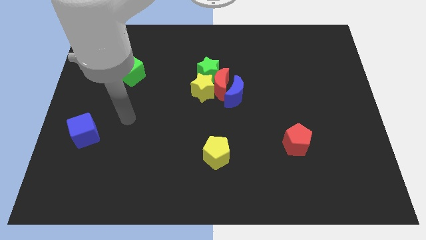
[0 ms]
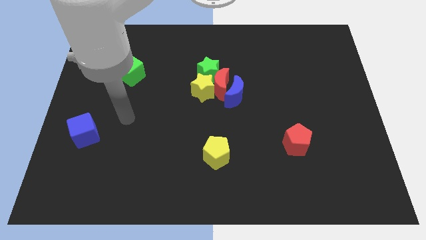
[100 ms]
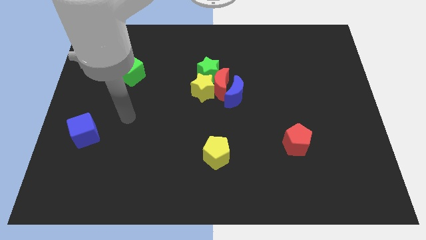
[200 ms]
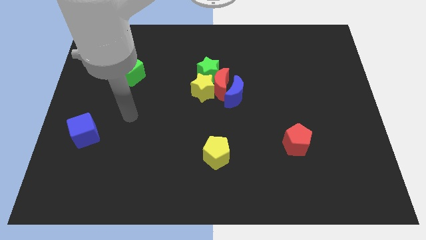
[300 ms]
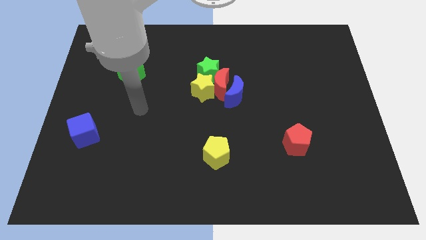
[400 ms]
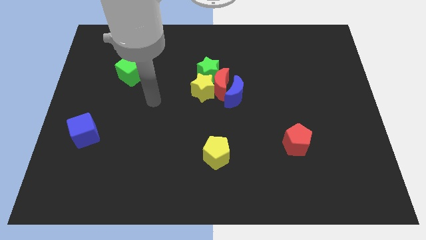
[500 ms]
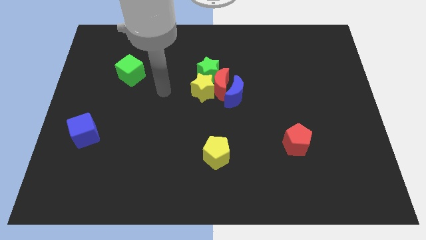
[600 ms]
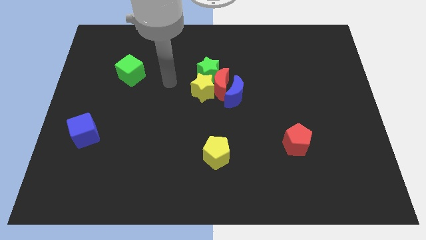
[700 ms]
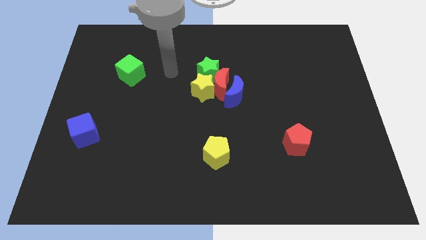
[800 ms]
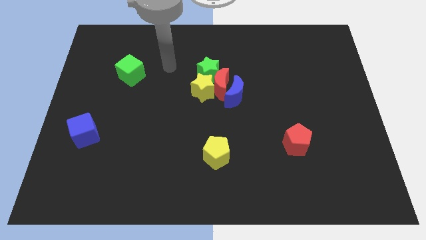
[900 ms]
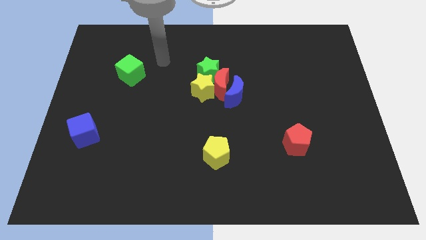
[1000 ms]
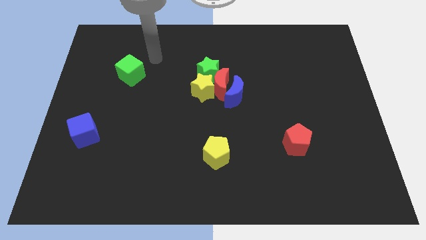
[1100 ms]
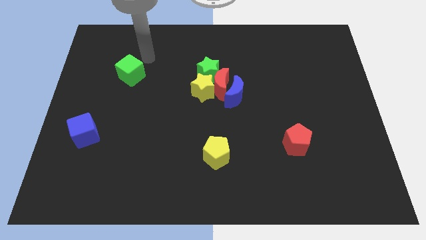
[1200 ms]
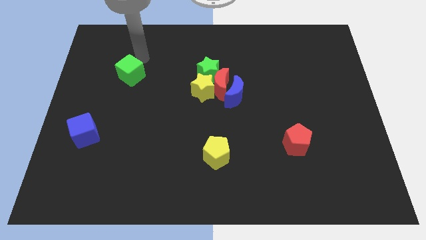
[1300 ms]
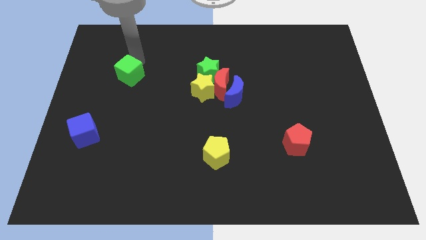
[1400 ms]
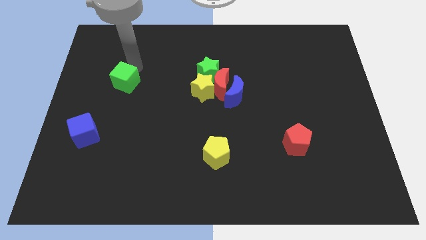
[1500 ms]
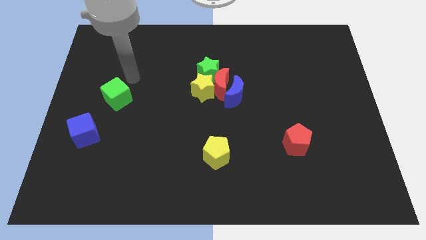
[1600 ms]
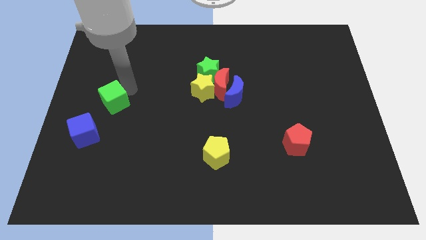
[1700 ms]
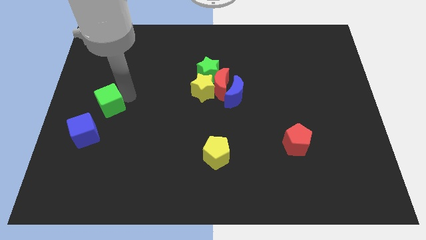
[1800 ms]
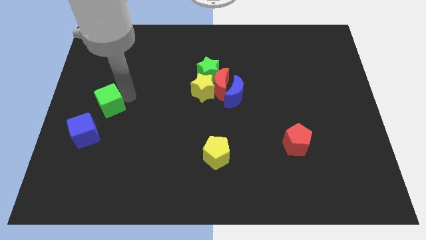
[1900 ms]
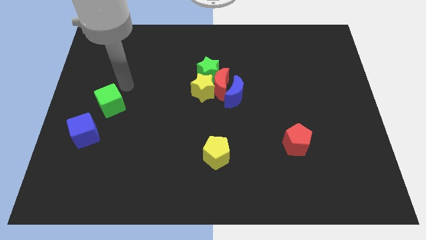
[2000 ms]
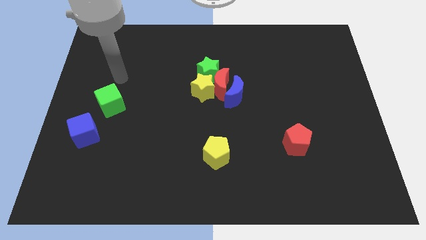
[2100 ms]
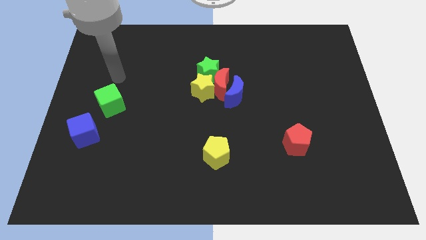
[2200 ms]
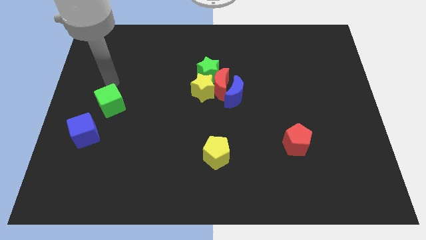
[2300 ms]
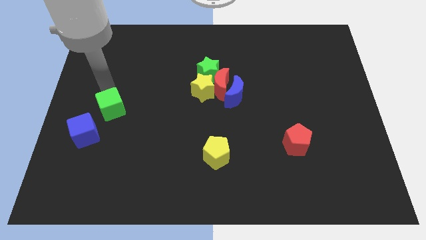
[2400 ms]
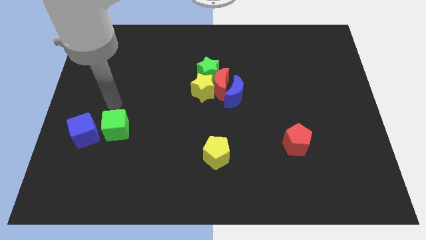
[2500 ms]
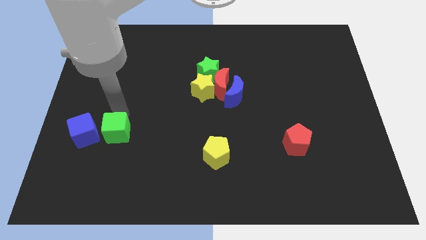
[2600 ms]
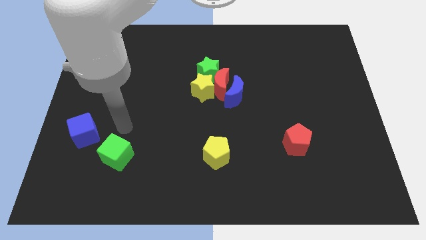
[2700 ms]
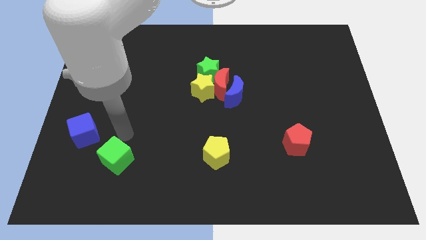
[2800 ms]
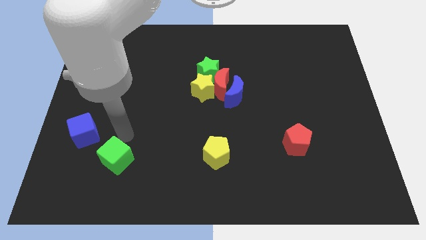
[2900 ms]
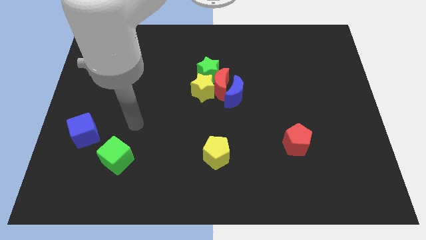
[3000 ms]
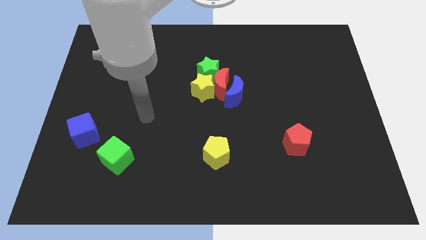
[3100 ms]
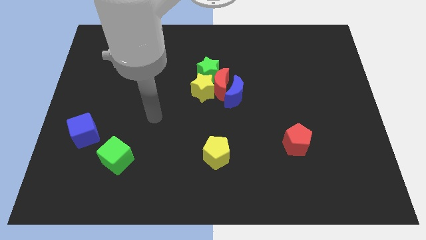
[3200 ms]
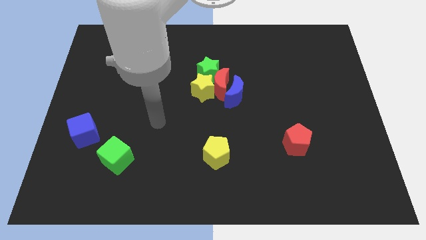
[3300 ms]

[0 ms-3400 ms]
place green cube to the bottom right of blue cube

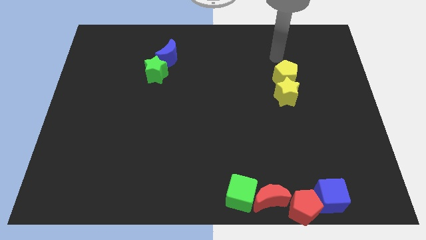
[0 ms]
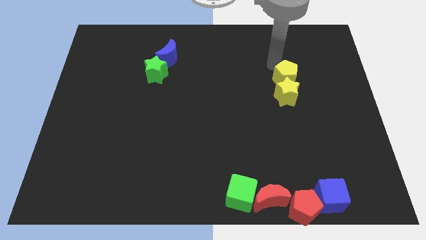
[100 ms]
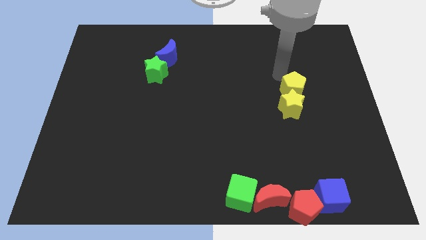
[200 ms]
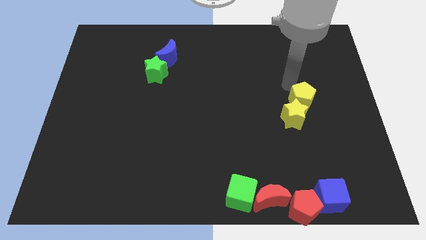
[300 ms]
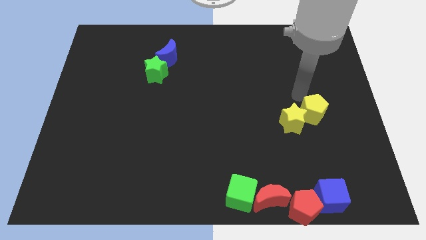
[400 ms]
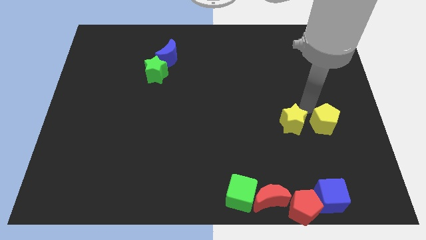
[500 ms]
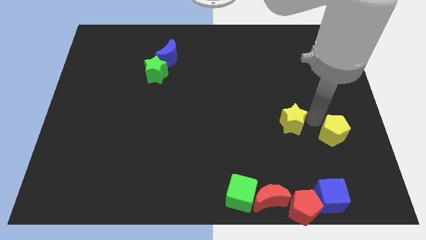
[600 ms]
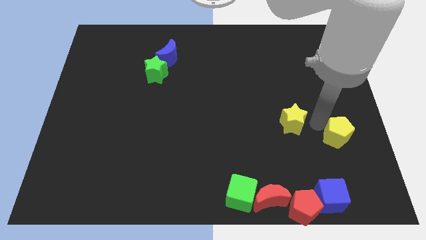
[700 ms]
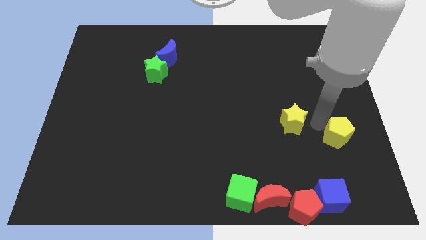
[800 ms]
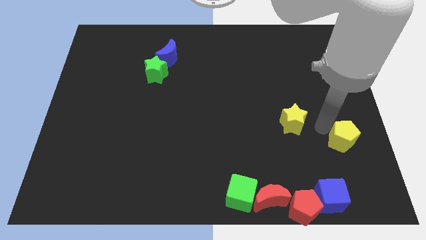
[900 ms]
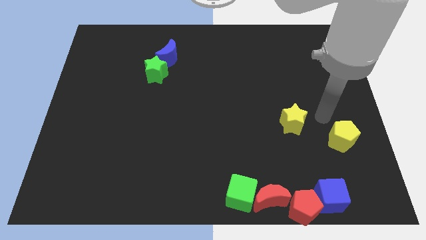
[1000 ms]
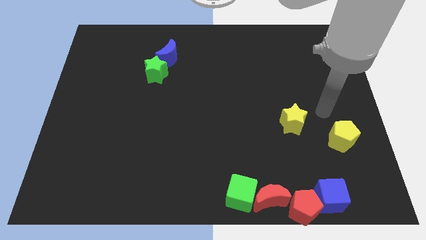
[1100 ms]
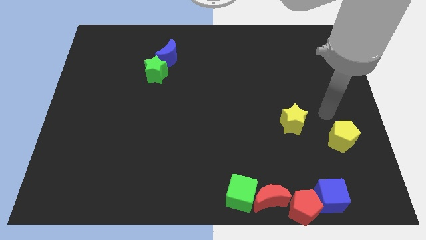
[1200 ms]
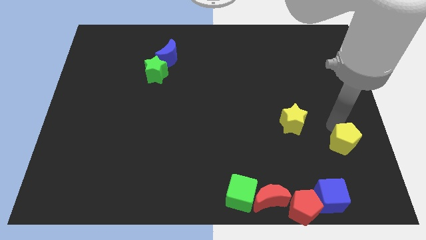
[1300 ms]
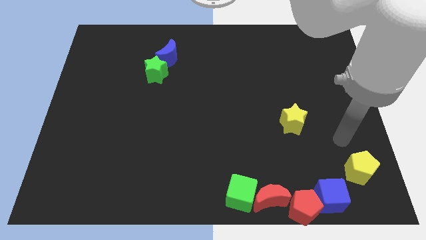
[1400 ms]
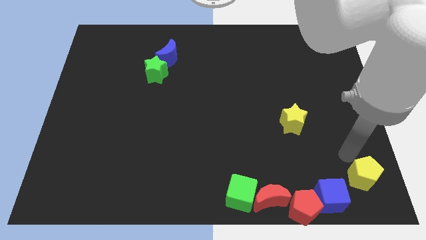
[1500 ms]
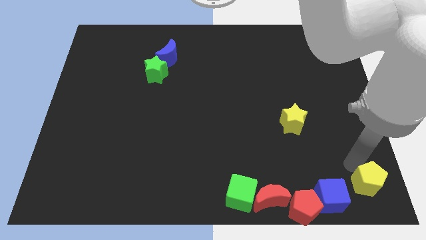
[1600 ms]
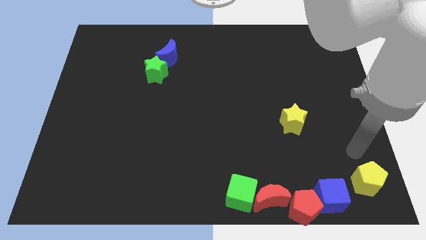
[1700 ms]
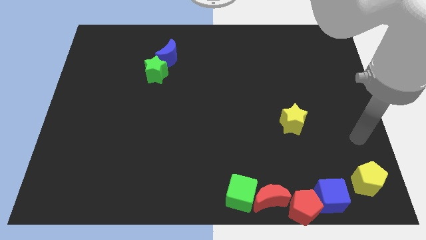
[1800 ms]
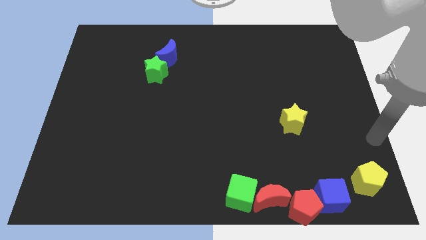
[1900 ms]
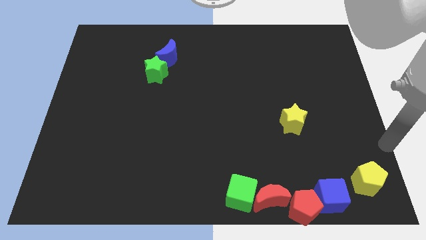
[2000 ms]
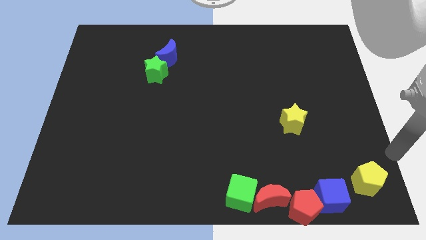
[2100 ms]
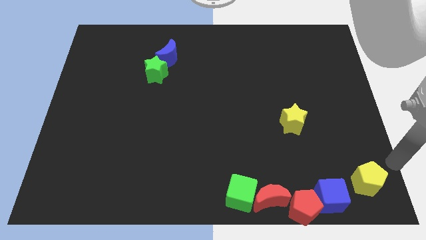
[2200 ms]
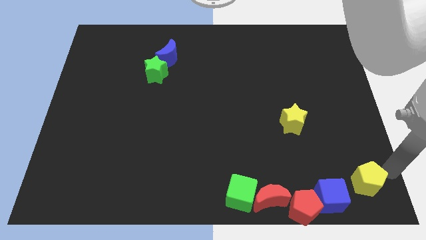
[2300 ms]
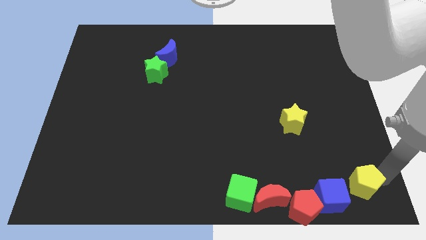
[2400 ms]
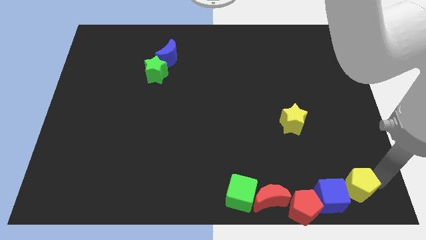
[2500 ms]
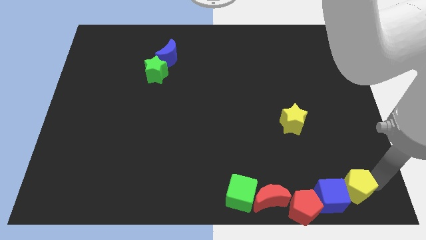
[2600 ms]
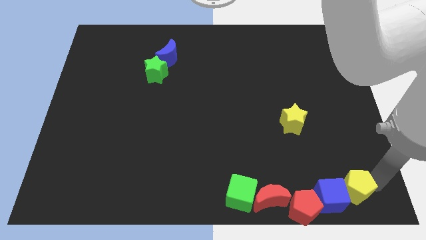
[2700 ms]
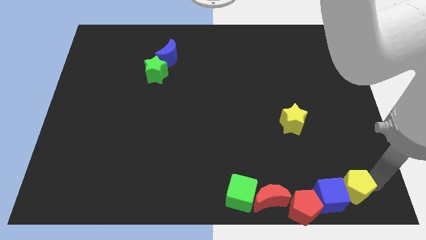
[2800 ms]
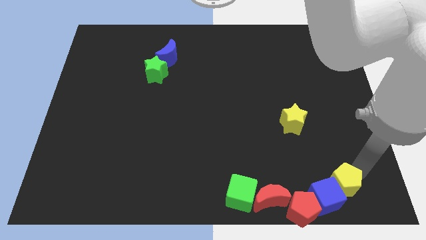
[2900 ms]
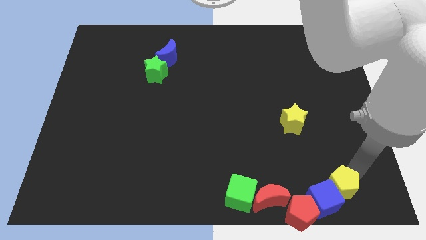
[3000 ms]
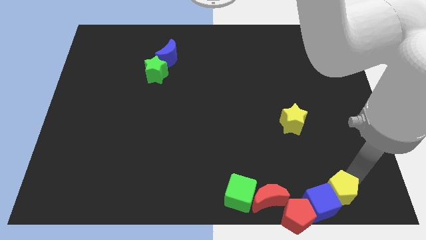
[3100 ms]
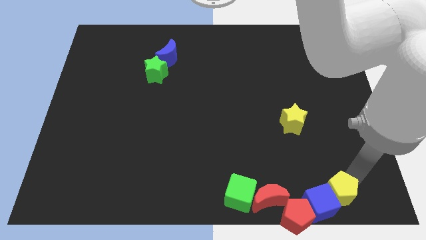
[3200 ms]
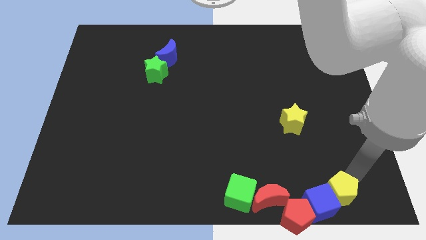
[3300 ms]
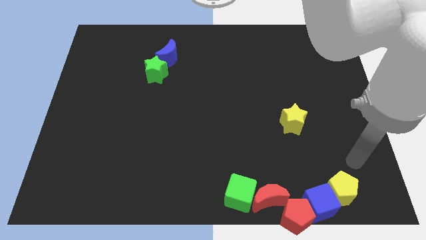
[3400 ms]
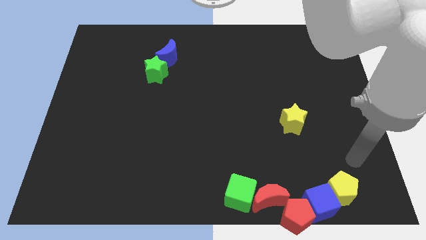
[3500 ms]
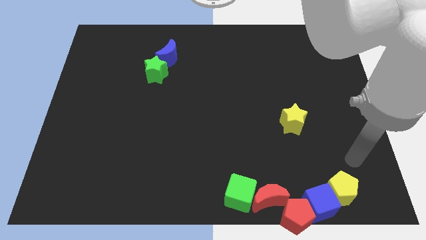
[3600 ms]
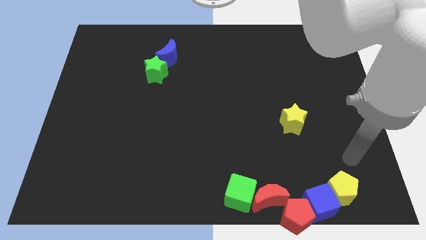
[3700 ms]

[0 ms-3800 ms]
separate the yellow pentagon towards blue cube diagonally

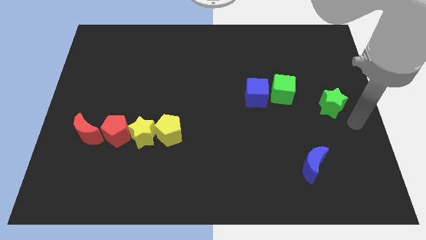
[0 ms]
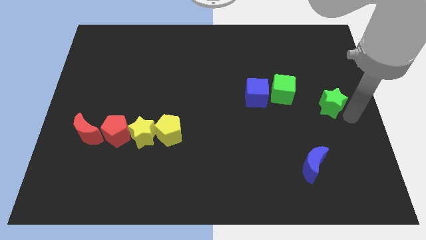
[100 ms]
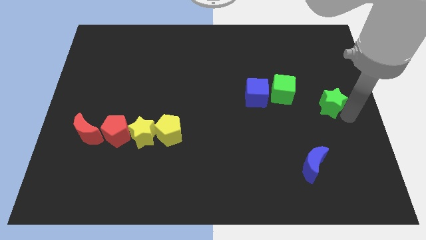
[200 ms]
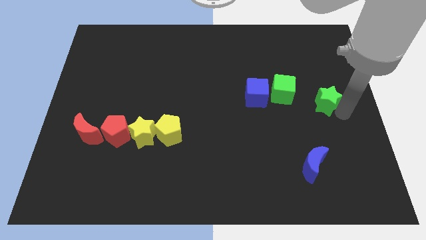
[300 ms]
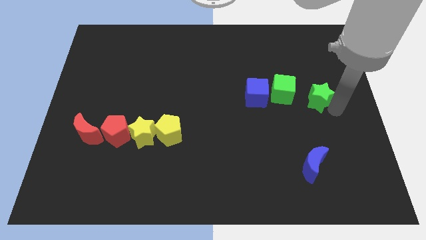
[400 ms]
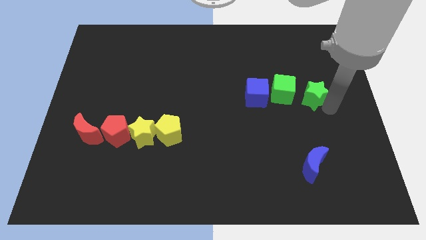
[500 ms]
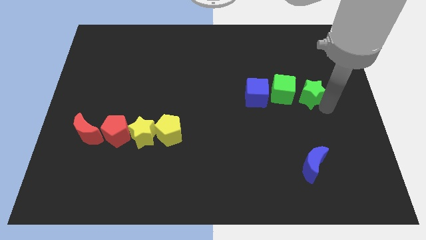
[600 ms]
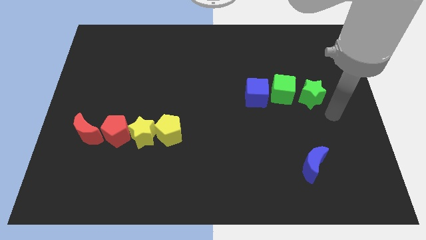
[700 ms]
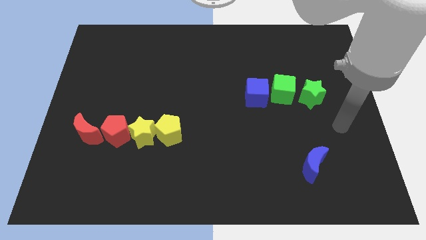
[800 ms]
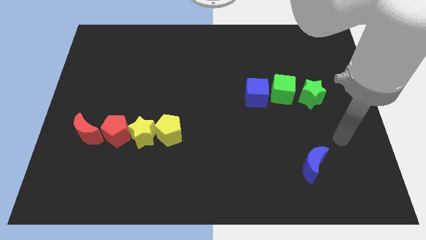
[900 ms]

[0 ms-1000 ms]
push green star towards green cube

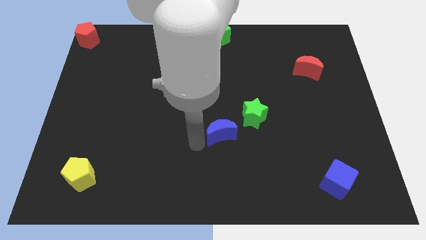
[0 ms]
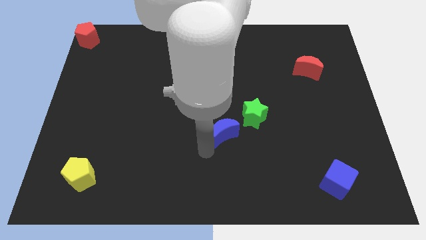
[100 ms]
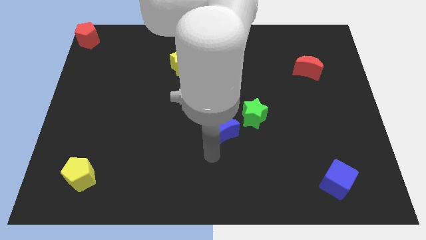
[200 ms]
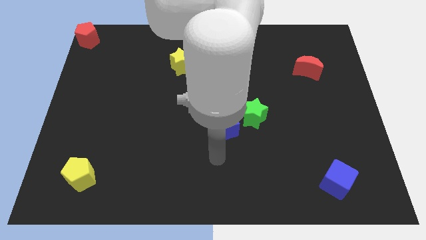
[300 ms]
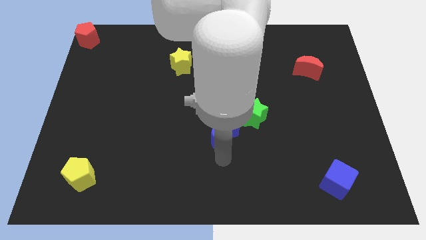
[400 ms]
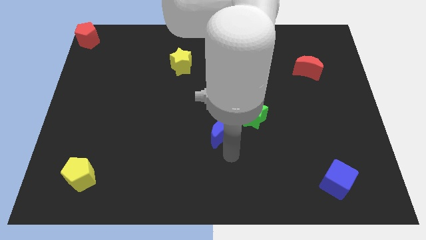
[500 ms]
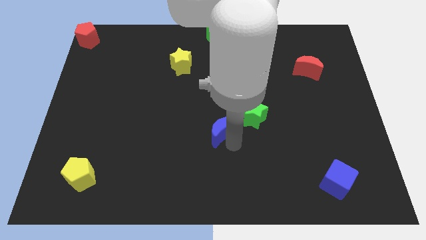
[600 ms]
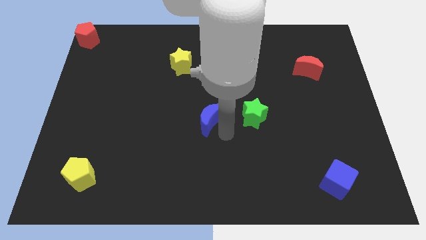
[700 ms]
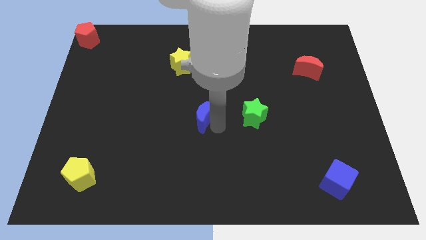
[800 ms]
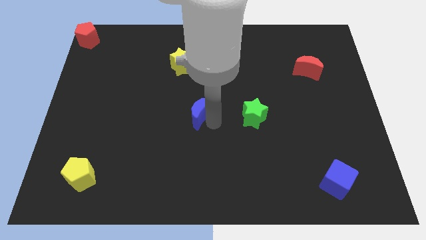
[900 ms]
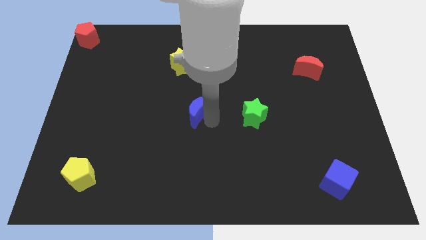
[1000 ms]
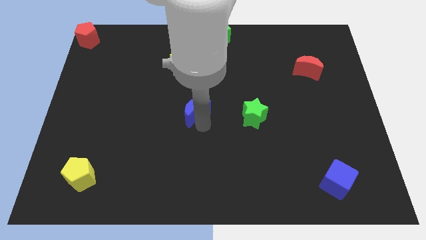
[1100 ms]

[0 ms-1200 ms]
move the blue moon to the center
